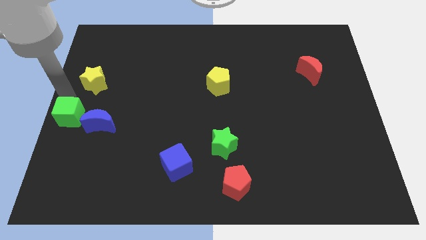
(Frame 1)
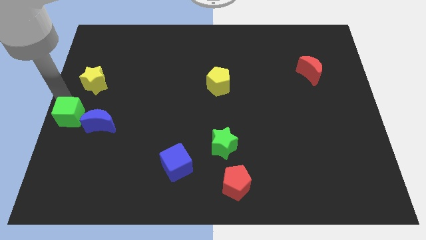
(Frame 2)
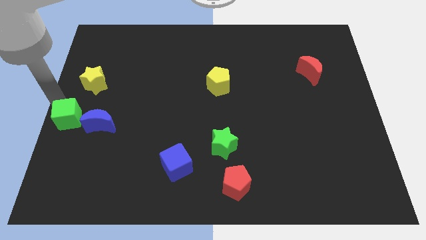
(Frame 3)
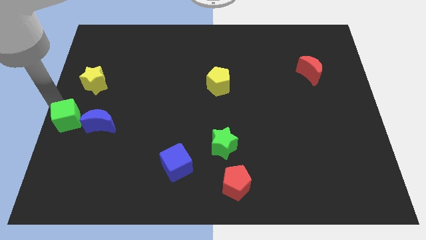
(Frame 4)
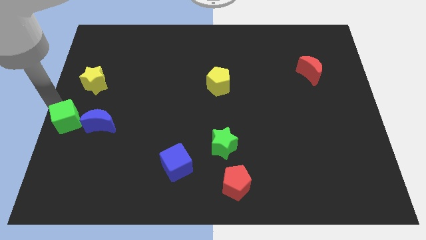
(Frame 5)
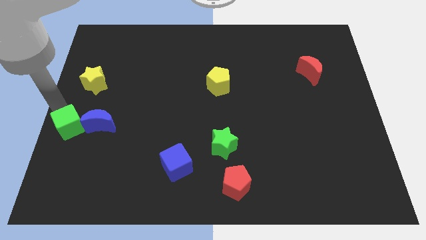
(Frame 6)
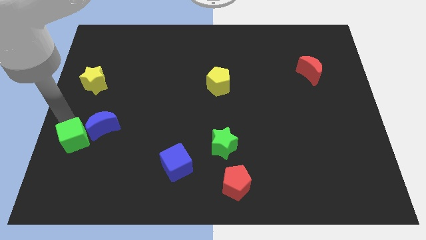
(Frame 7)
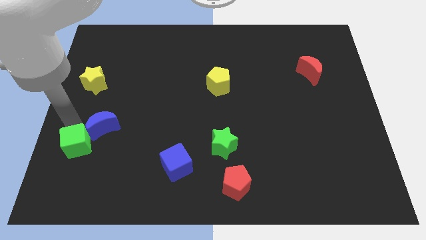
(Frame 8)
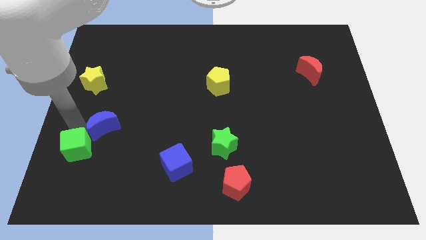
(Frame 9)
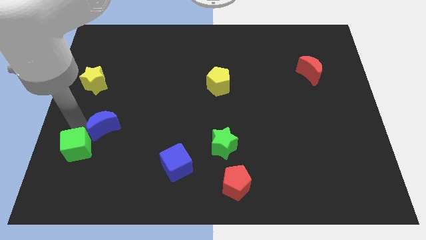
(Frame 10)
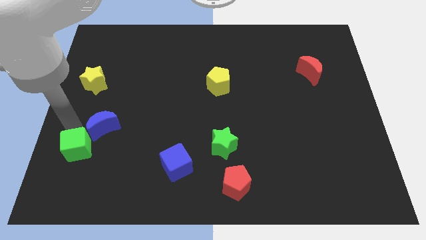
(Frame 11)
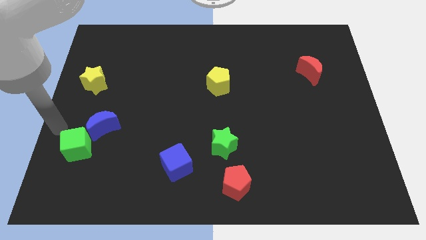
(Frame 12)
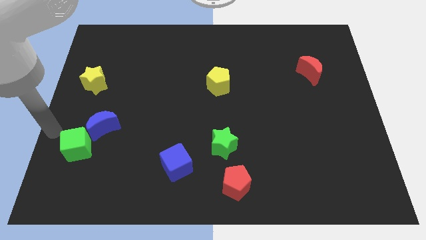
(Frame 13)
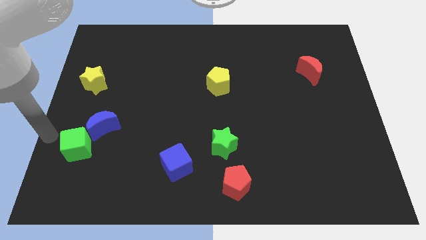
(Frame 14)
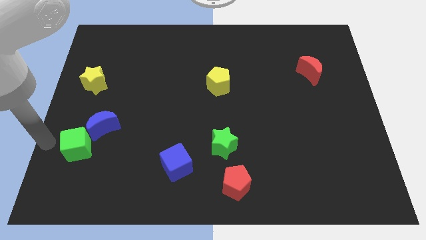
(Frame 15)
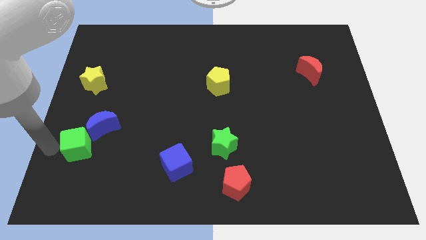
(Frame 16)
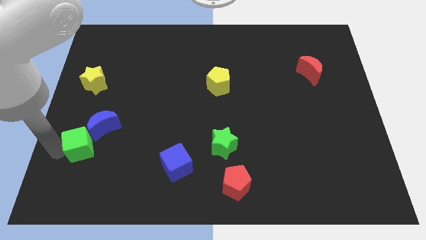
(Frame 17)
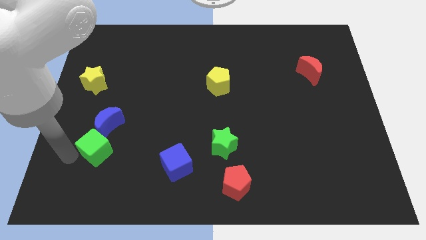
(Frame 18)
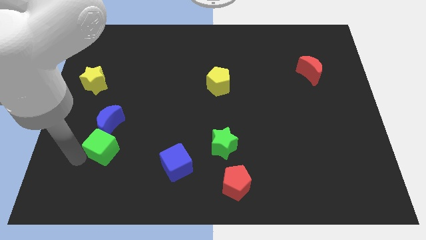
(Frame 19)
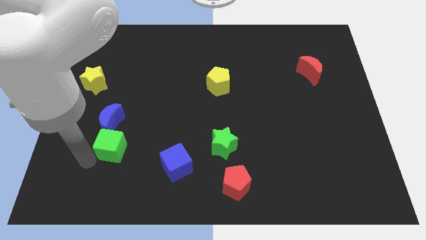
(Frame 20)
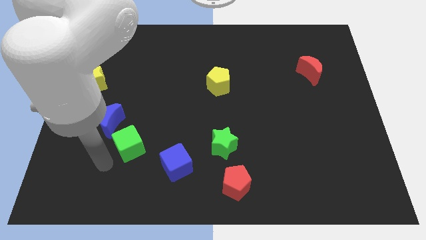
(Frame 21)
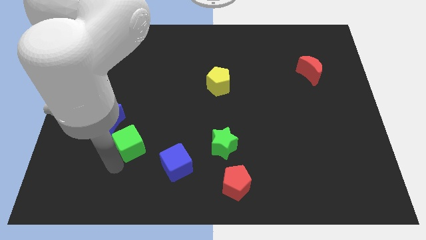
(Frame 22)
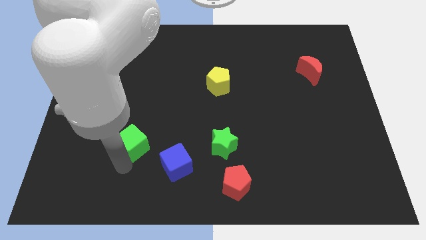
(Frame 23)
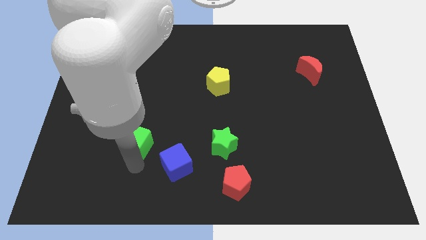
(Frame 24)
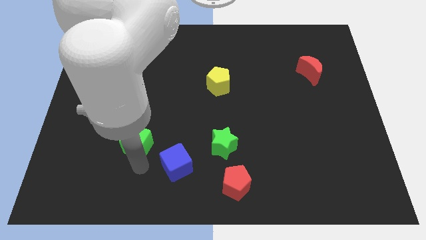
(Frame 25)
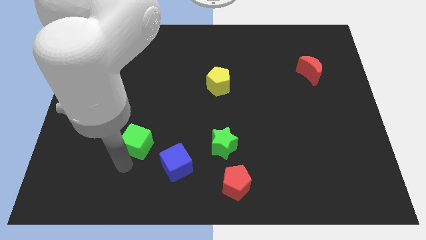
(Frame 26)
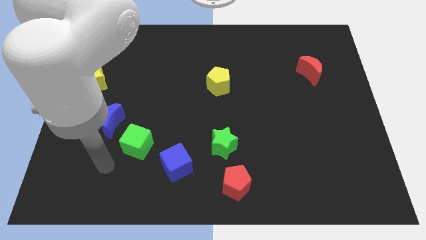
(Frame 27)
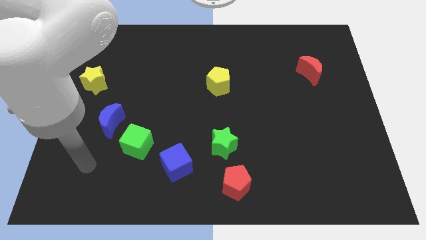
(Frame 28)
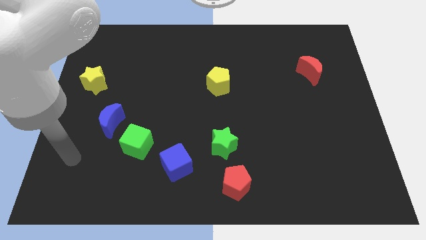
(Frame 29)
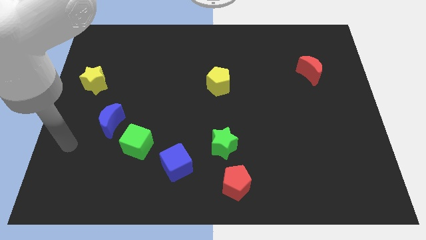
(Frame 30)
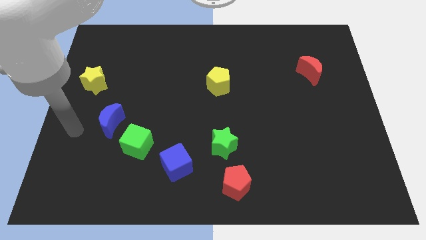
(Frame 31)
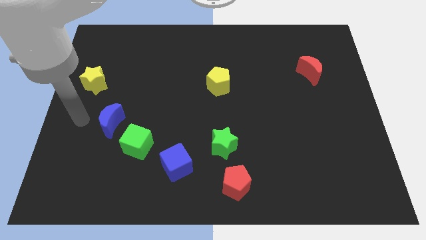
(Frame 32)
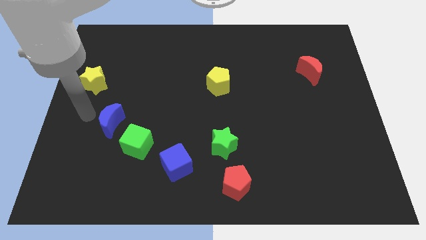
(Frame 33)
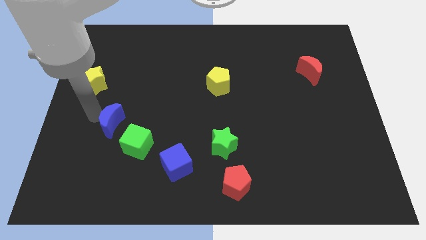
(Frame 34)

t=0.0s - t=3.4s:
place the green cube between the blue moon and blue cube

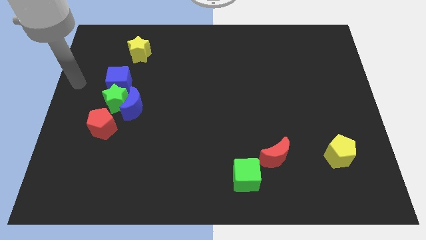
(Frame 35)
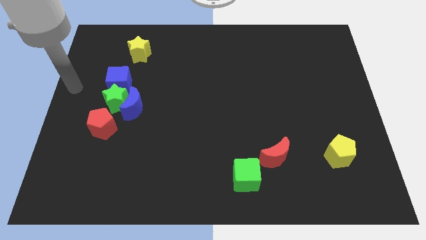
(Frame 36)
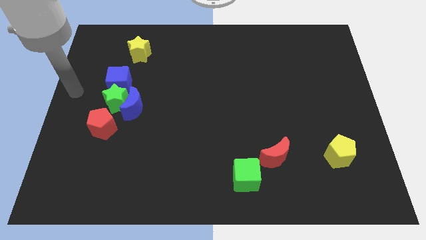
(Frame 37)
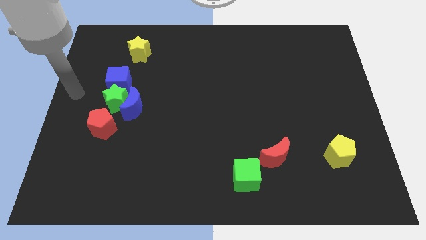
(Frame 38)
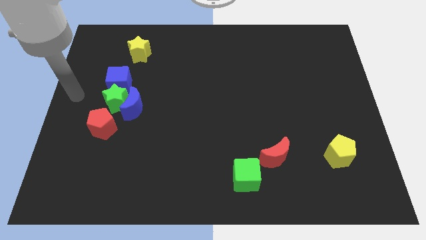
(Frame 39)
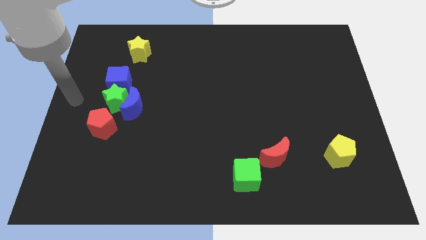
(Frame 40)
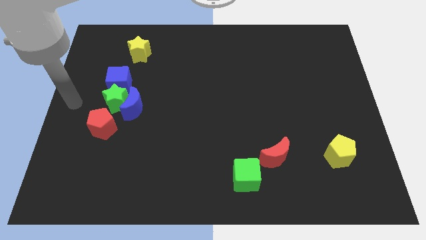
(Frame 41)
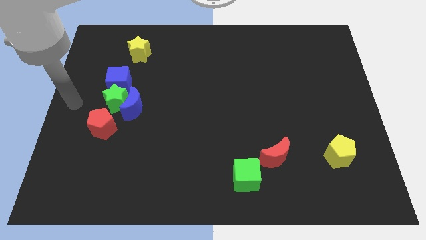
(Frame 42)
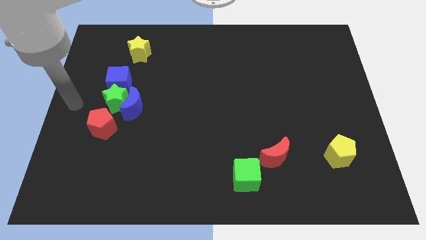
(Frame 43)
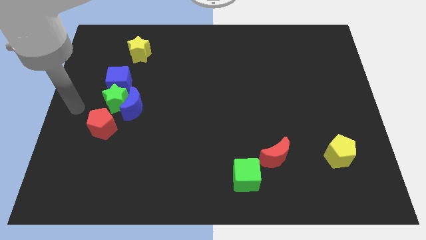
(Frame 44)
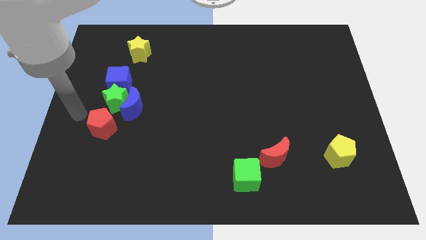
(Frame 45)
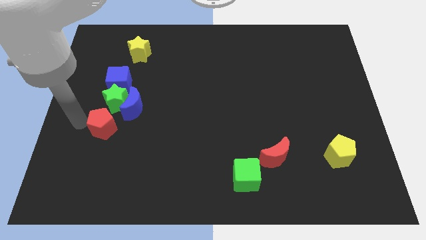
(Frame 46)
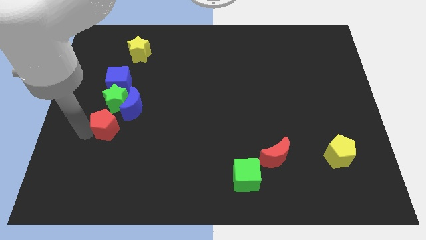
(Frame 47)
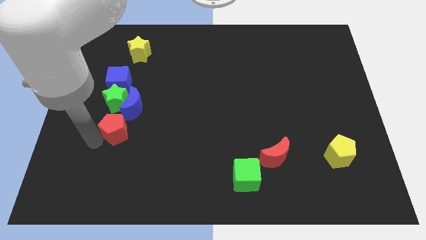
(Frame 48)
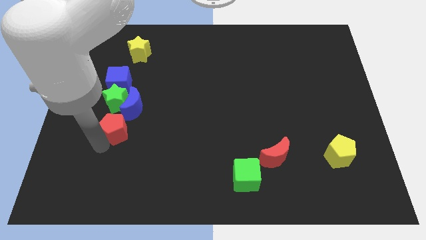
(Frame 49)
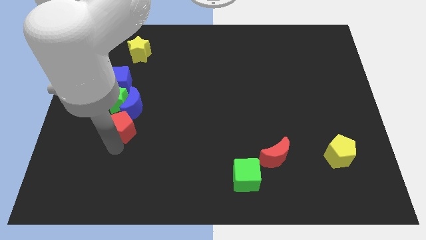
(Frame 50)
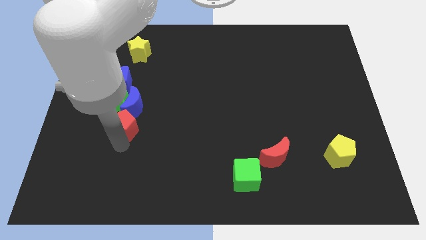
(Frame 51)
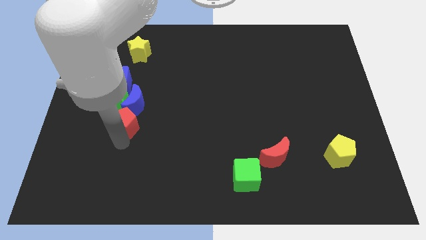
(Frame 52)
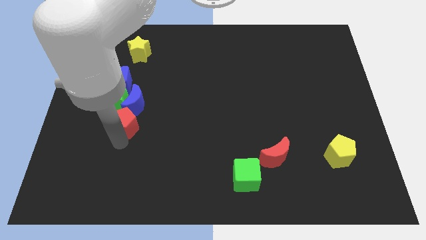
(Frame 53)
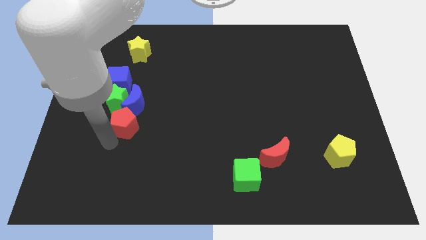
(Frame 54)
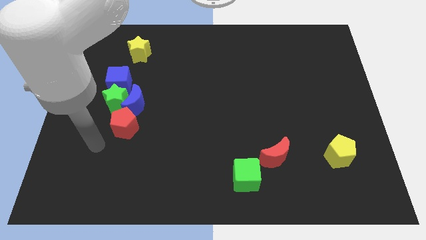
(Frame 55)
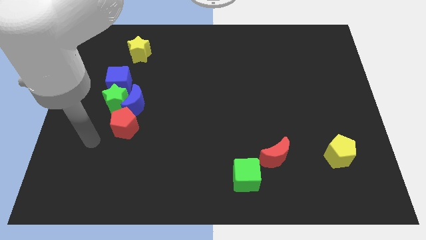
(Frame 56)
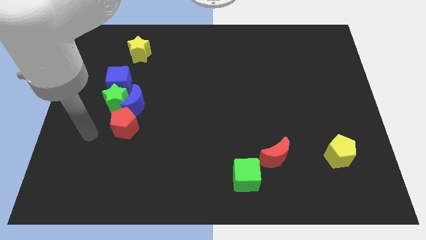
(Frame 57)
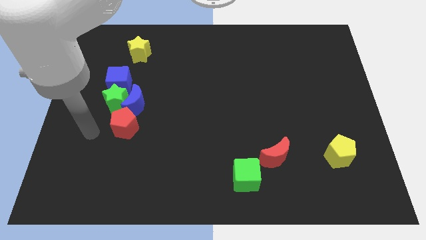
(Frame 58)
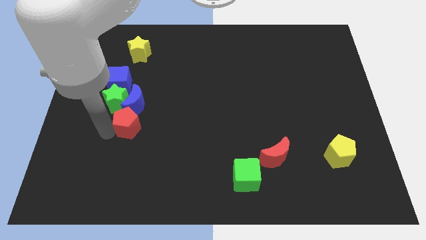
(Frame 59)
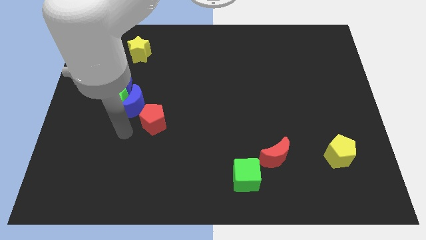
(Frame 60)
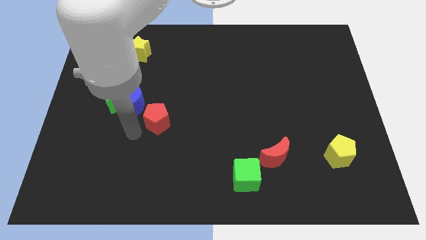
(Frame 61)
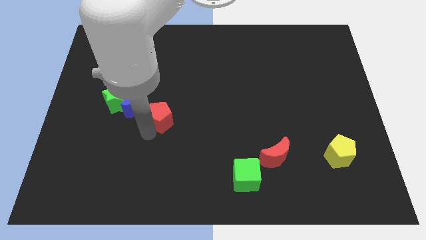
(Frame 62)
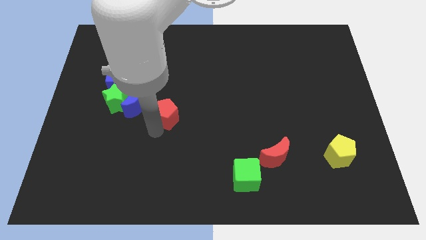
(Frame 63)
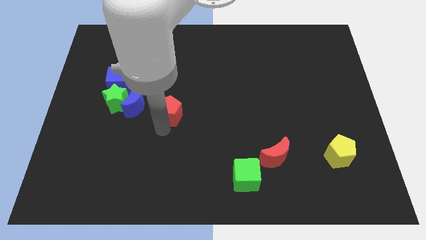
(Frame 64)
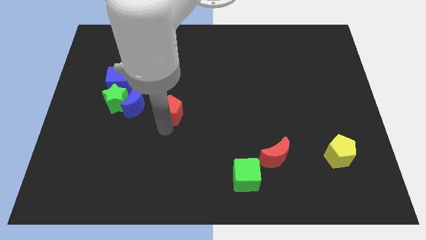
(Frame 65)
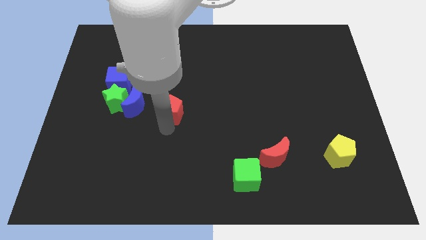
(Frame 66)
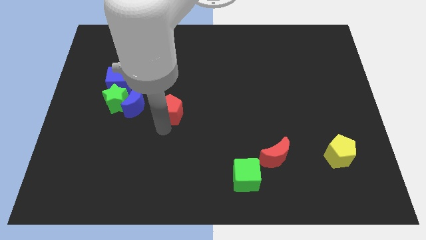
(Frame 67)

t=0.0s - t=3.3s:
slide the red pentagon to the right side of the blue crescent

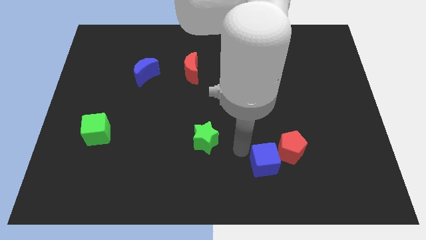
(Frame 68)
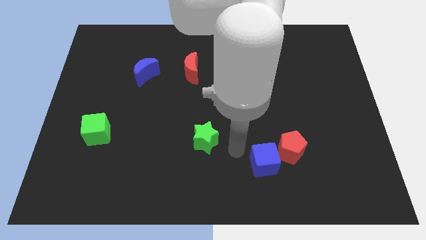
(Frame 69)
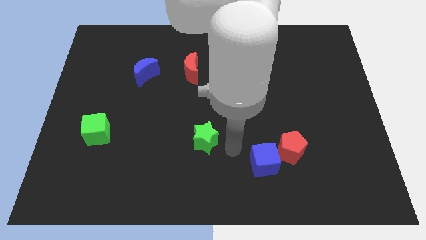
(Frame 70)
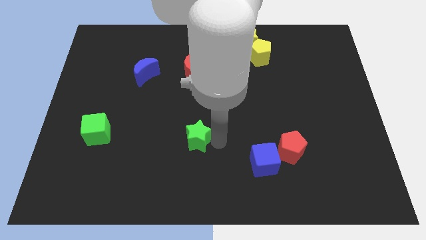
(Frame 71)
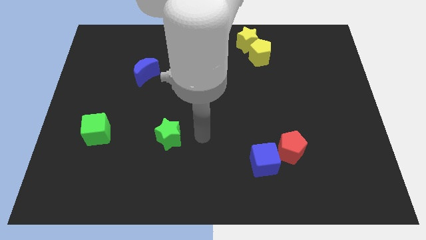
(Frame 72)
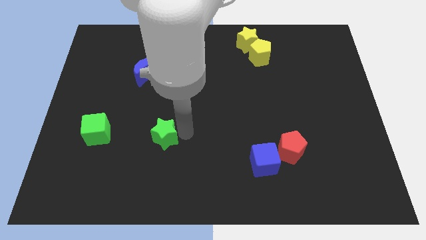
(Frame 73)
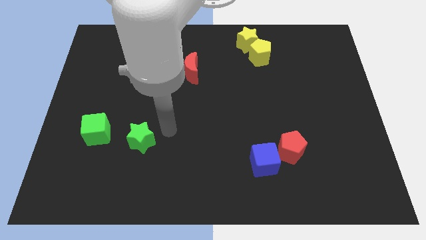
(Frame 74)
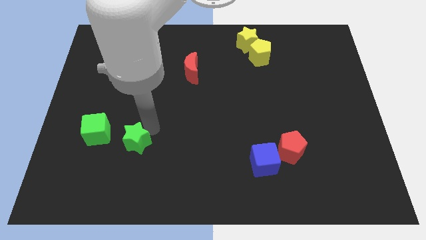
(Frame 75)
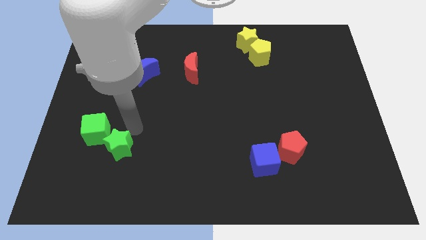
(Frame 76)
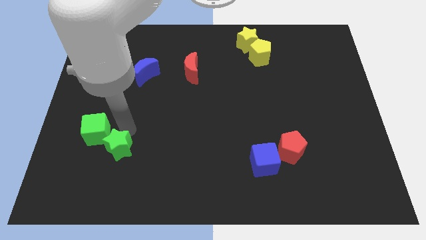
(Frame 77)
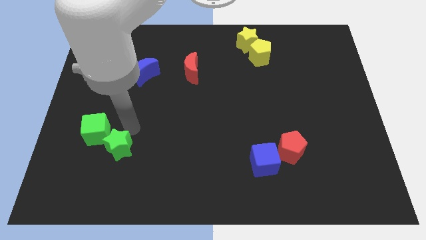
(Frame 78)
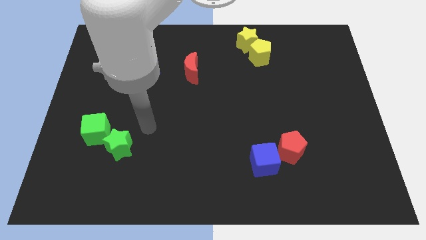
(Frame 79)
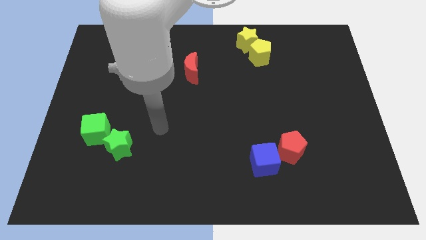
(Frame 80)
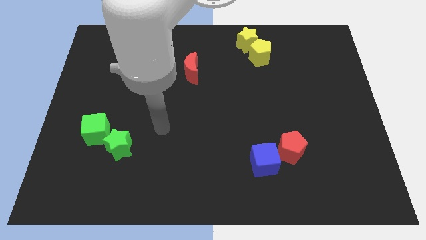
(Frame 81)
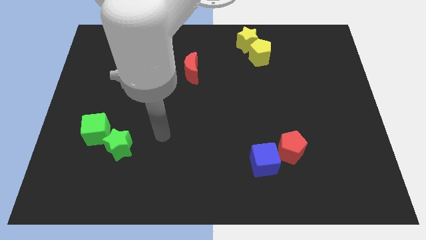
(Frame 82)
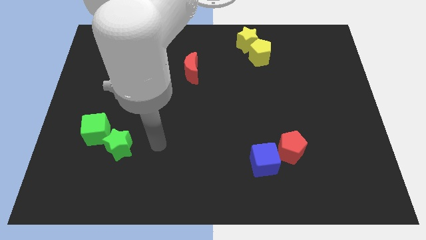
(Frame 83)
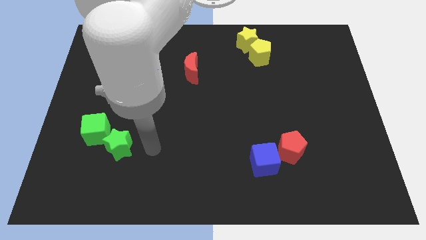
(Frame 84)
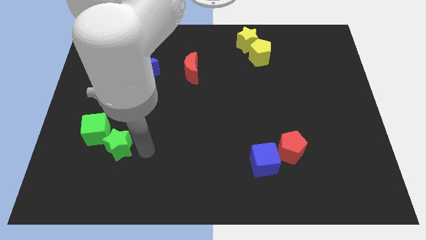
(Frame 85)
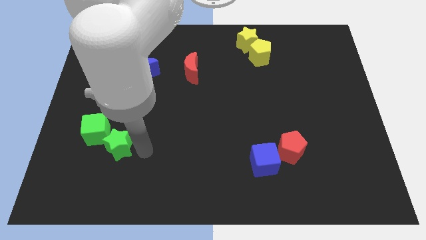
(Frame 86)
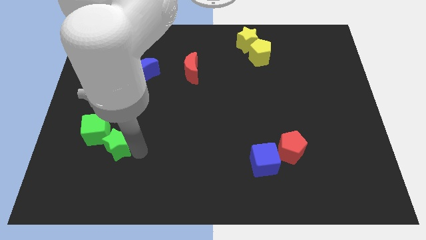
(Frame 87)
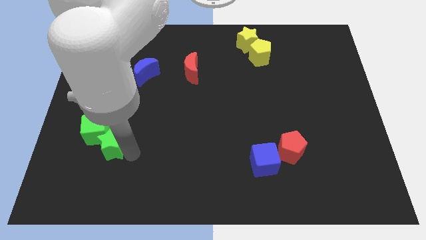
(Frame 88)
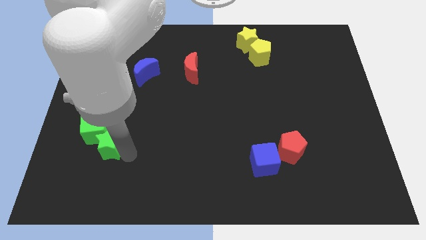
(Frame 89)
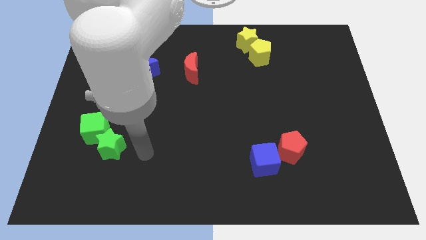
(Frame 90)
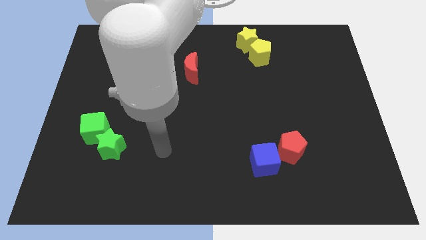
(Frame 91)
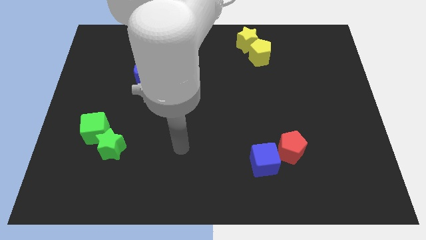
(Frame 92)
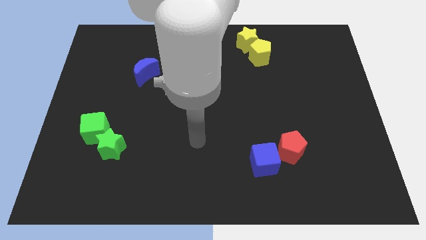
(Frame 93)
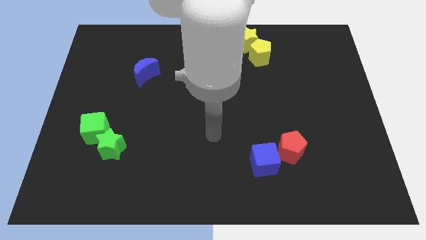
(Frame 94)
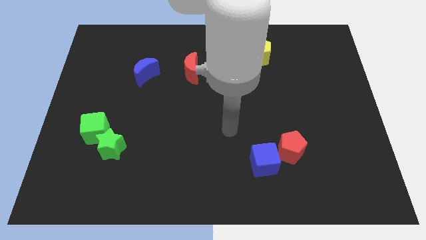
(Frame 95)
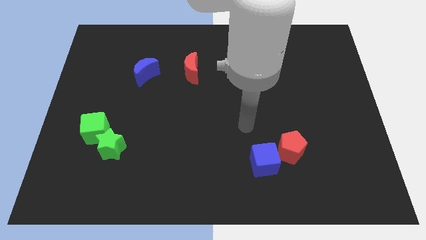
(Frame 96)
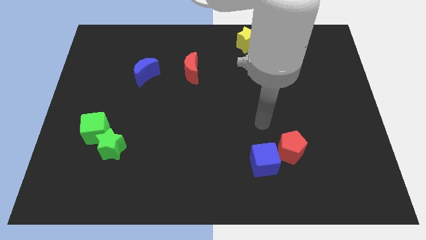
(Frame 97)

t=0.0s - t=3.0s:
push the green star to the bottom right of the green cube
